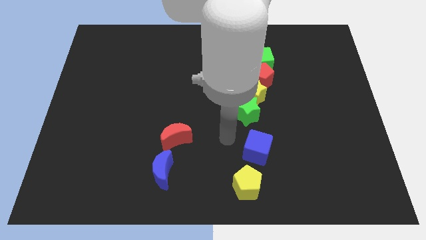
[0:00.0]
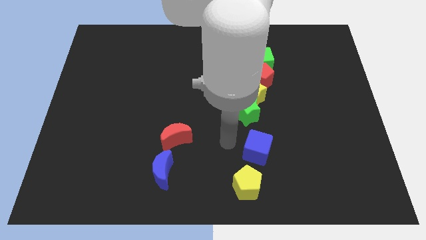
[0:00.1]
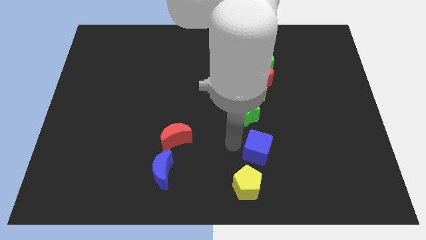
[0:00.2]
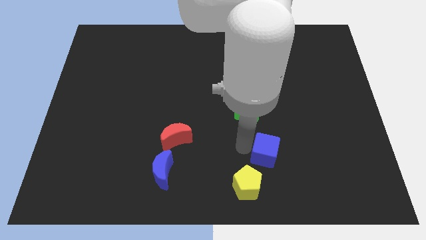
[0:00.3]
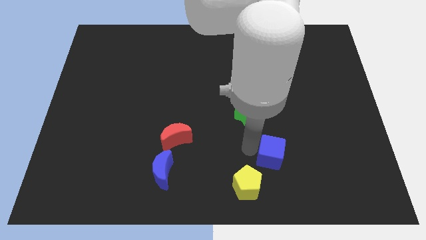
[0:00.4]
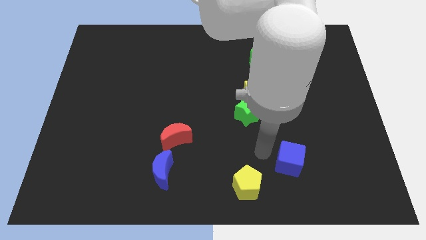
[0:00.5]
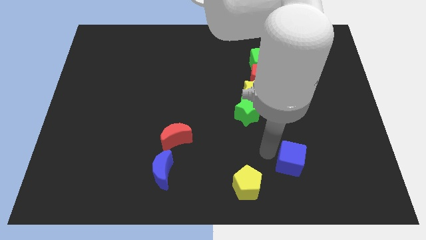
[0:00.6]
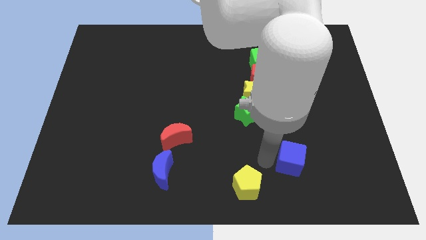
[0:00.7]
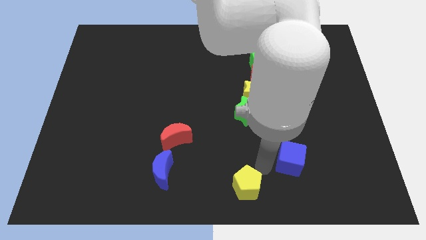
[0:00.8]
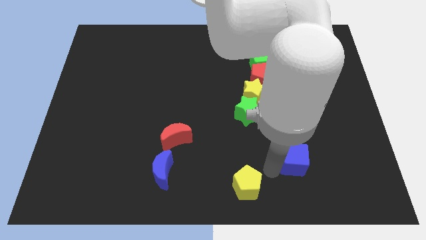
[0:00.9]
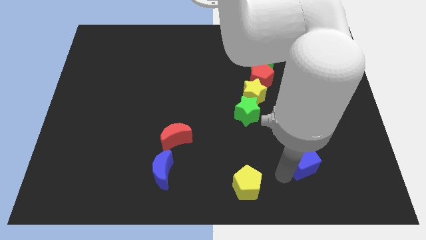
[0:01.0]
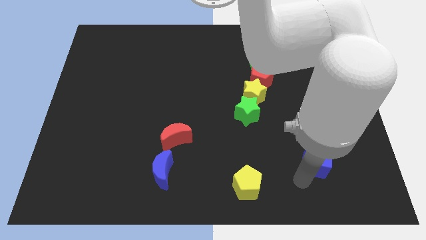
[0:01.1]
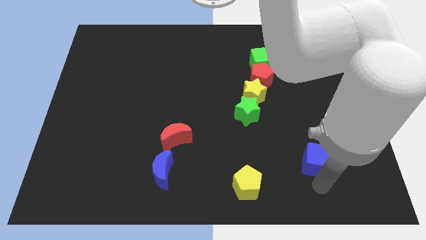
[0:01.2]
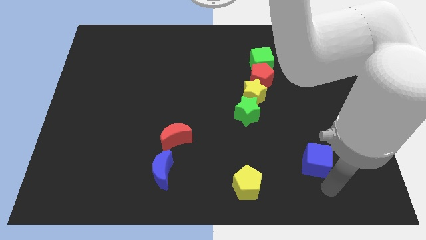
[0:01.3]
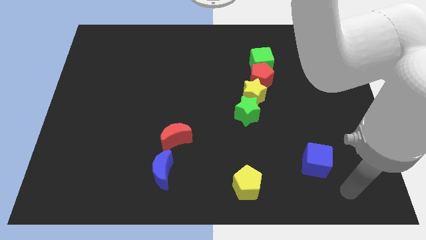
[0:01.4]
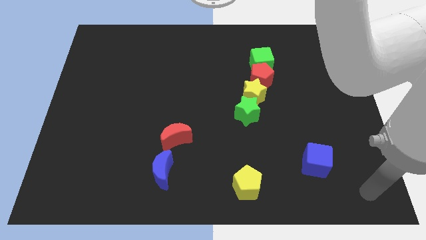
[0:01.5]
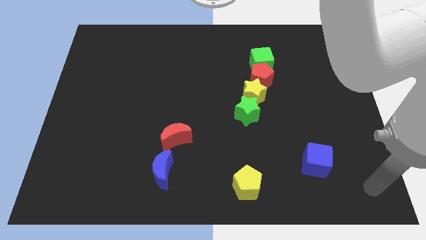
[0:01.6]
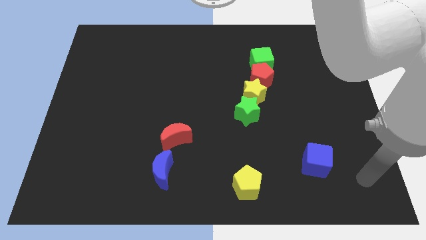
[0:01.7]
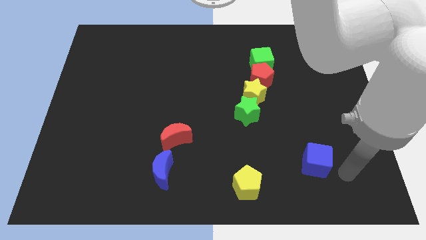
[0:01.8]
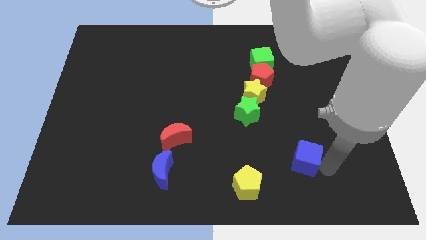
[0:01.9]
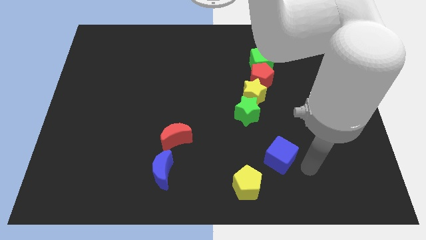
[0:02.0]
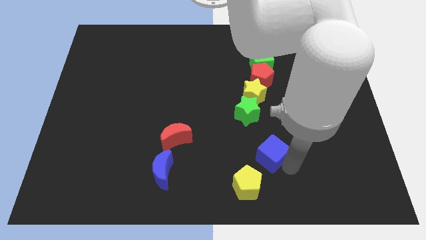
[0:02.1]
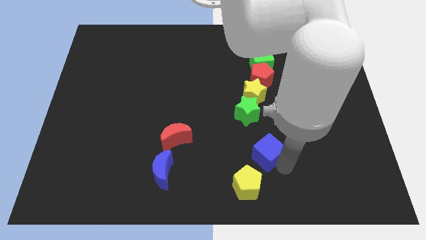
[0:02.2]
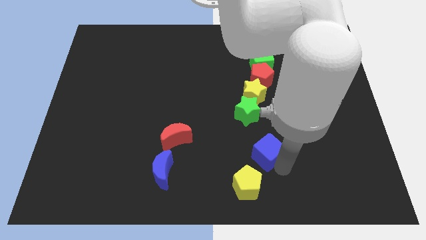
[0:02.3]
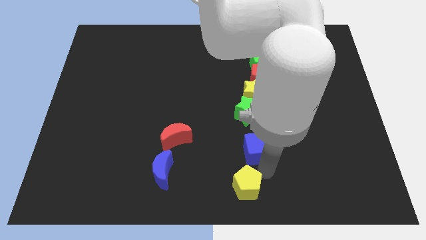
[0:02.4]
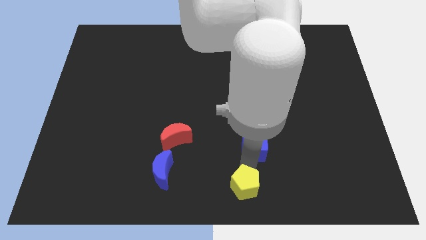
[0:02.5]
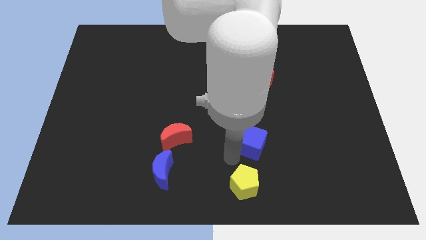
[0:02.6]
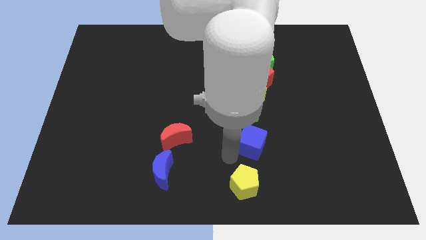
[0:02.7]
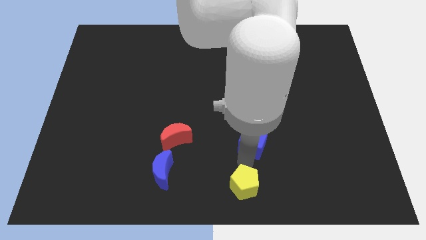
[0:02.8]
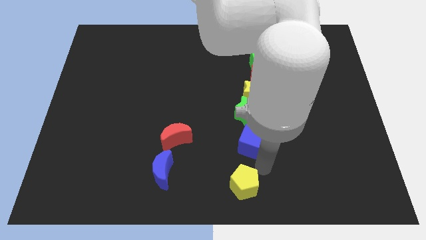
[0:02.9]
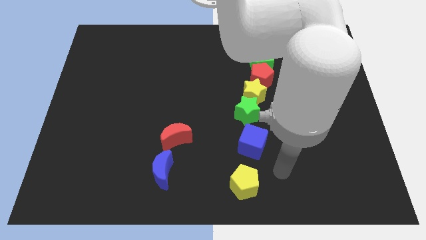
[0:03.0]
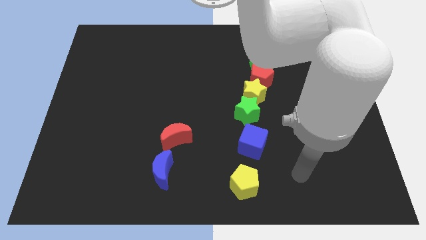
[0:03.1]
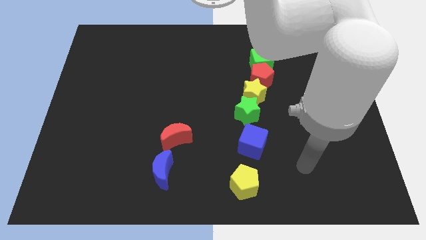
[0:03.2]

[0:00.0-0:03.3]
place the blue cube on the top side of the yellow pentagon

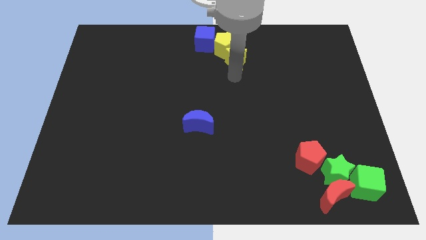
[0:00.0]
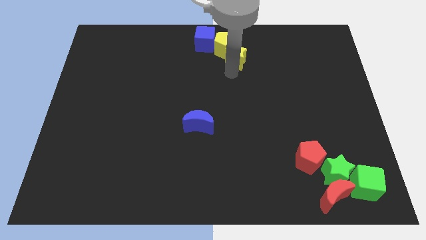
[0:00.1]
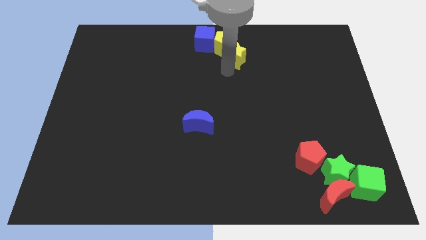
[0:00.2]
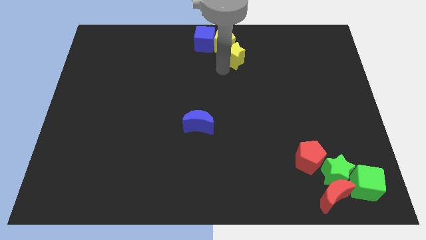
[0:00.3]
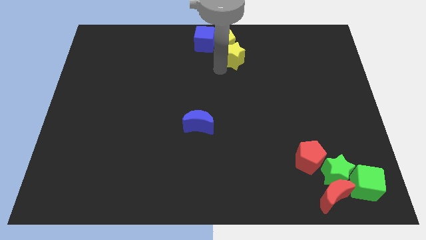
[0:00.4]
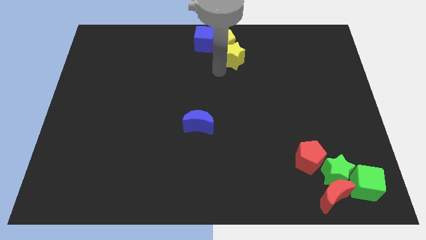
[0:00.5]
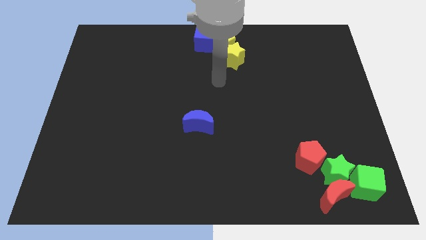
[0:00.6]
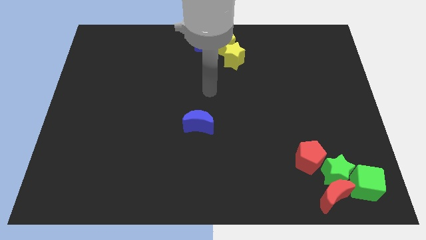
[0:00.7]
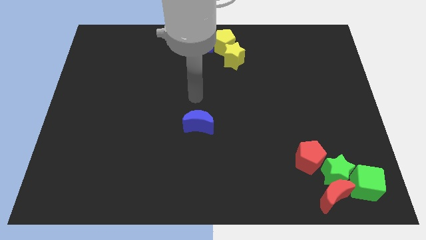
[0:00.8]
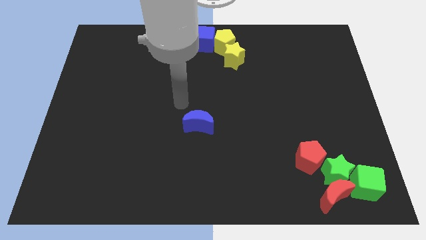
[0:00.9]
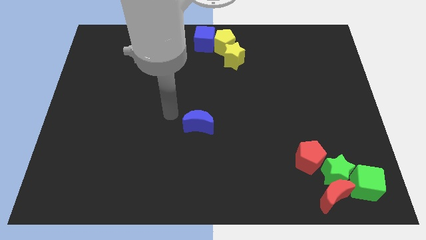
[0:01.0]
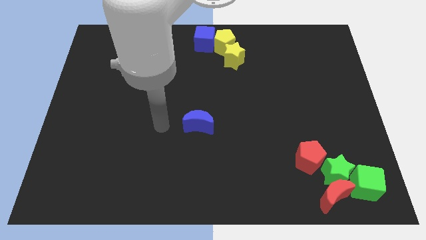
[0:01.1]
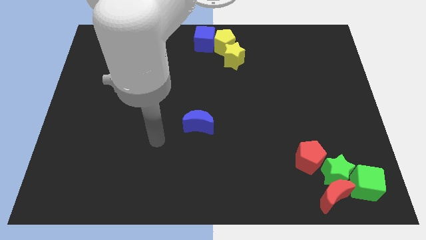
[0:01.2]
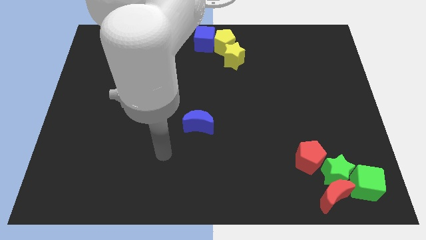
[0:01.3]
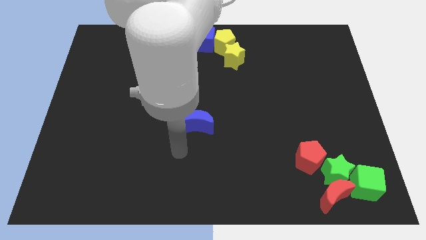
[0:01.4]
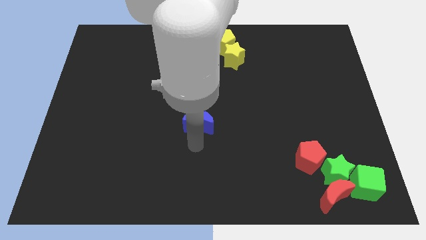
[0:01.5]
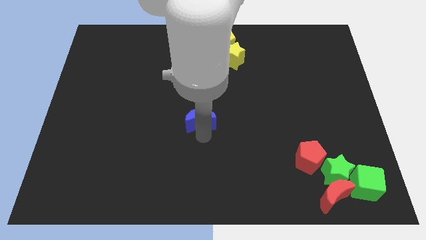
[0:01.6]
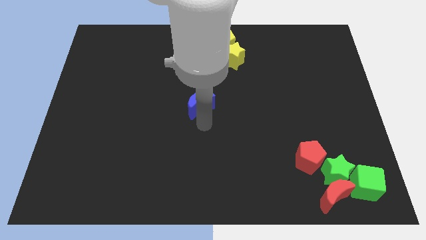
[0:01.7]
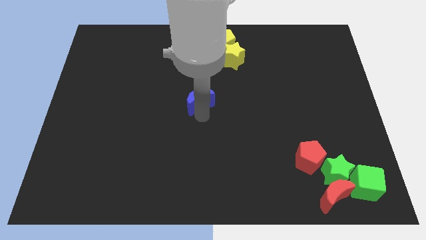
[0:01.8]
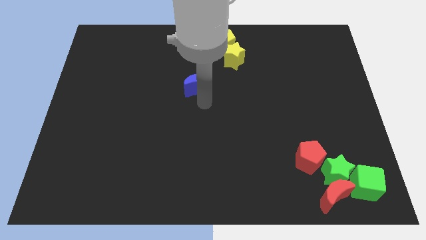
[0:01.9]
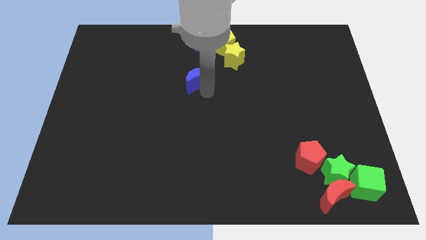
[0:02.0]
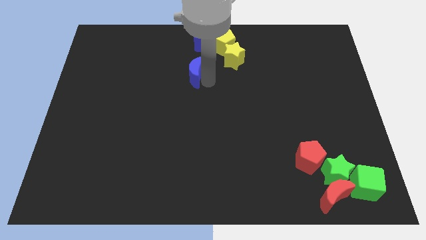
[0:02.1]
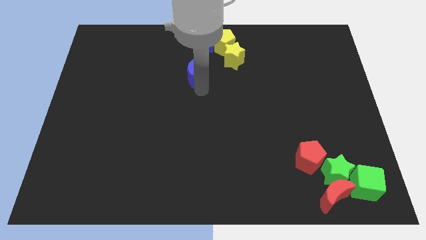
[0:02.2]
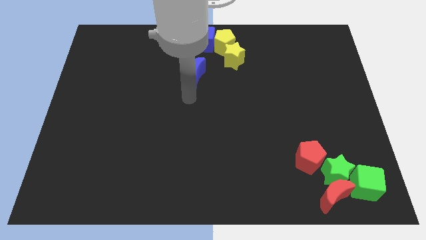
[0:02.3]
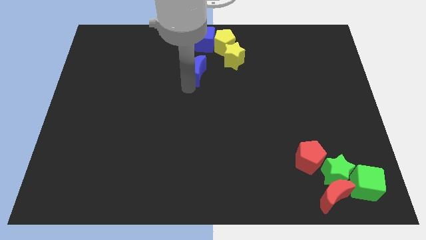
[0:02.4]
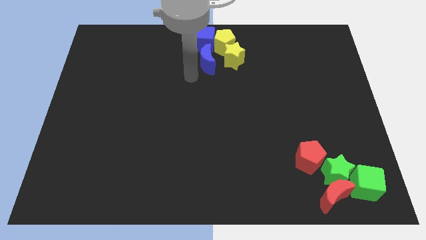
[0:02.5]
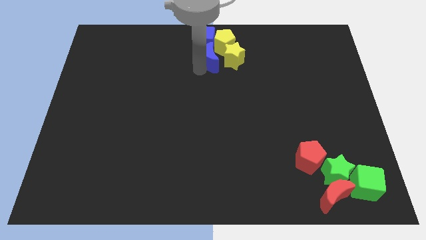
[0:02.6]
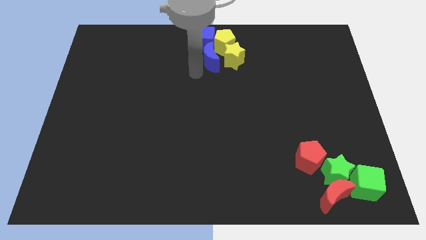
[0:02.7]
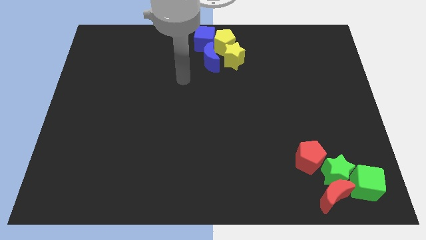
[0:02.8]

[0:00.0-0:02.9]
push the blue moon to the bottom of the blue cube

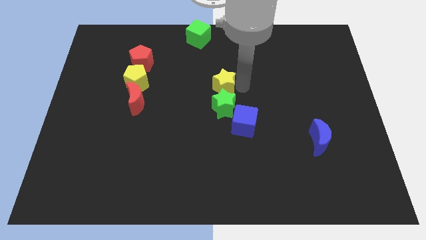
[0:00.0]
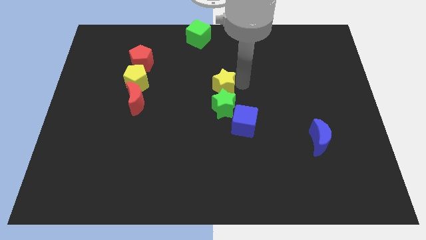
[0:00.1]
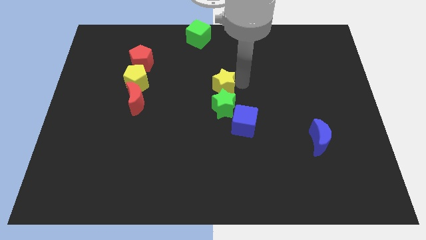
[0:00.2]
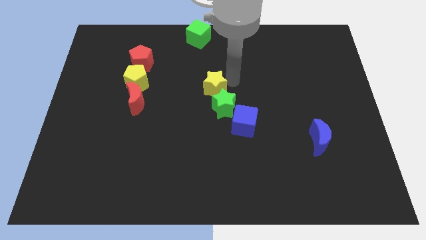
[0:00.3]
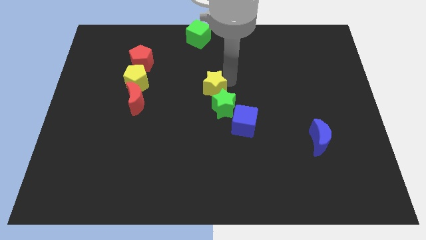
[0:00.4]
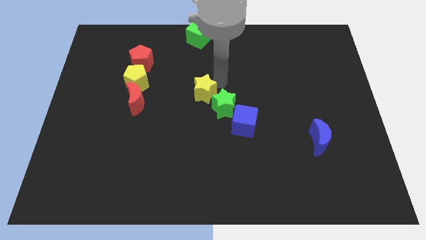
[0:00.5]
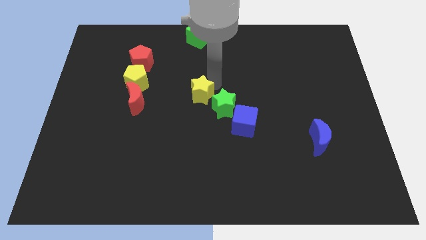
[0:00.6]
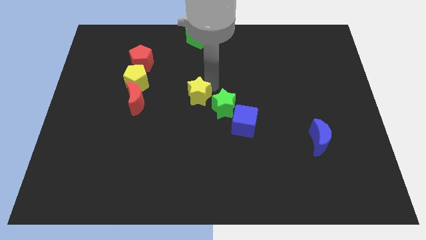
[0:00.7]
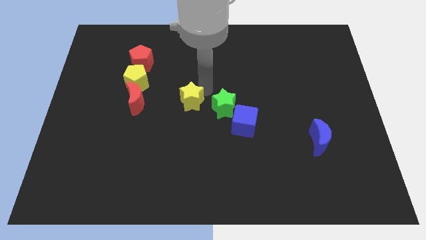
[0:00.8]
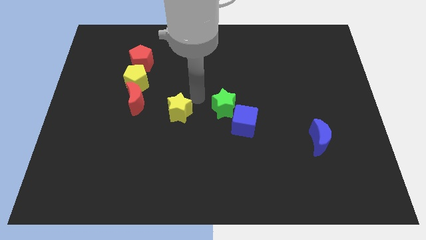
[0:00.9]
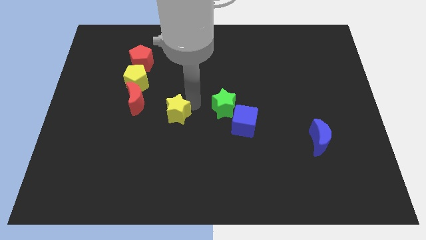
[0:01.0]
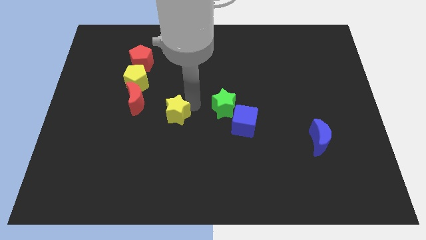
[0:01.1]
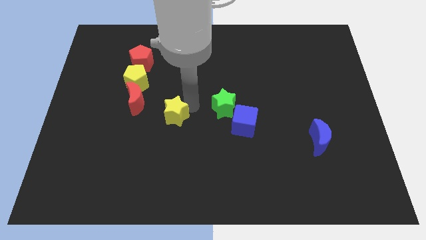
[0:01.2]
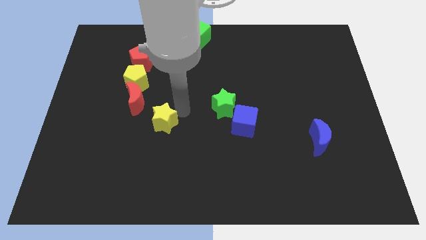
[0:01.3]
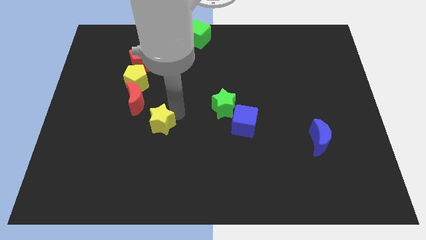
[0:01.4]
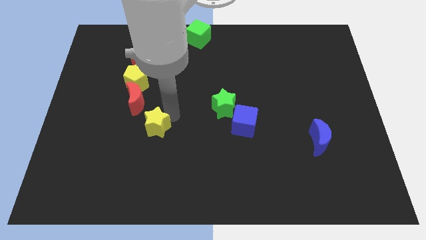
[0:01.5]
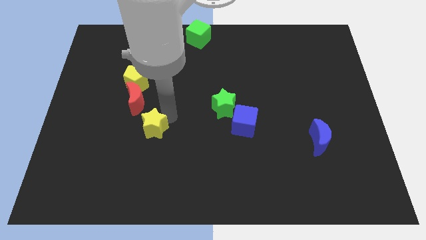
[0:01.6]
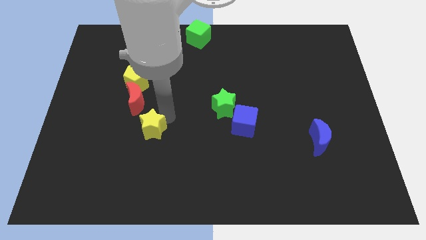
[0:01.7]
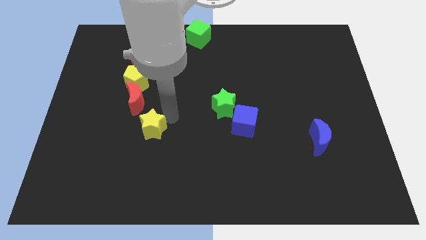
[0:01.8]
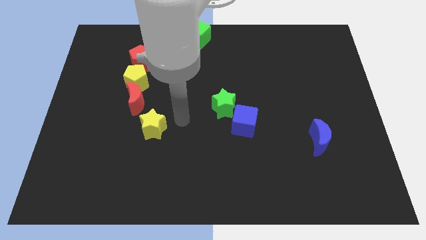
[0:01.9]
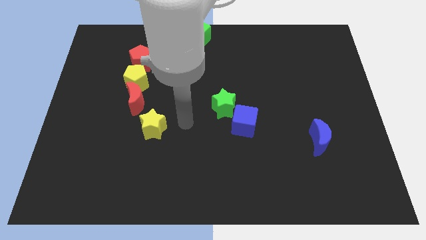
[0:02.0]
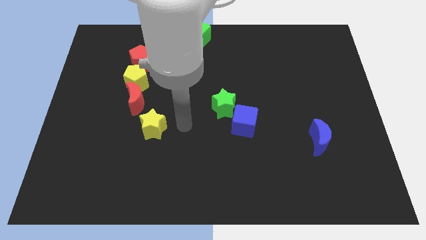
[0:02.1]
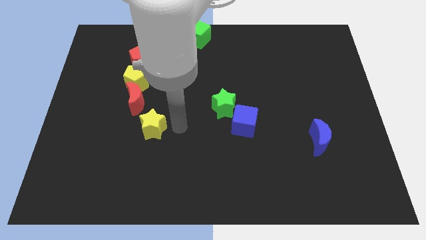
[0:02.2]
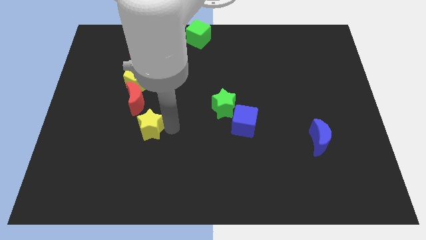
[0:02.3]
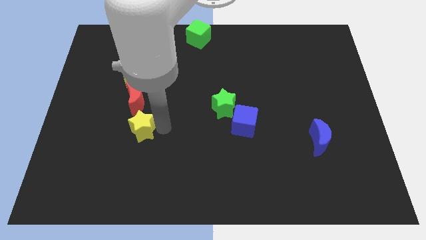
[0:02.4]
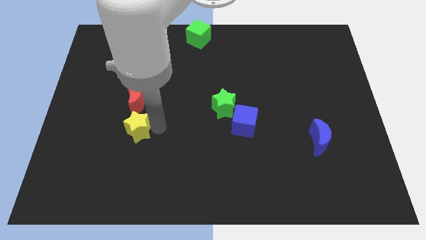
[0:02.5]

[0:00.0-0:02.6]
move the yellow star below the red moon
